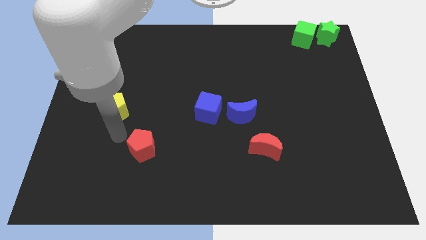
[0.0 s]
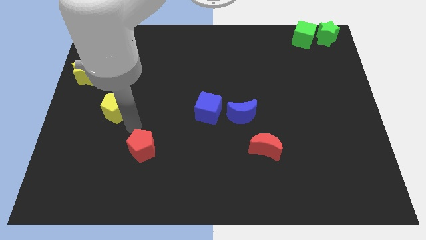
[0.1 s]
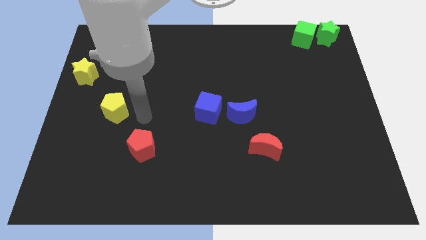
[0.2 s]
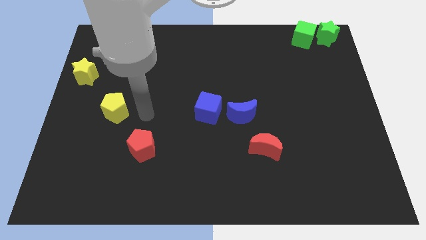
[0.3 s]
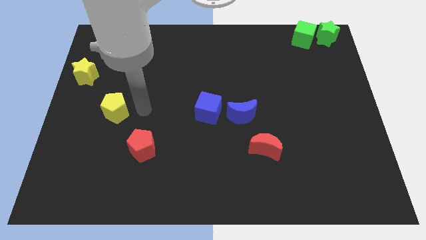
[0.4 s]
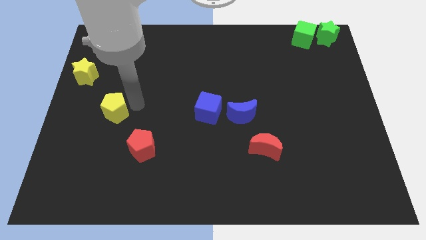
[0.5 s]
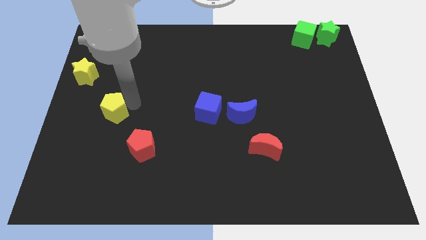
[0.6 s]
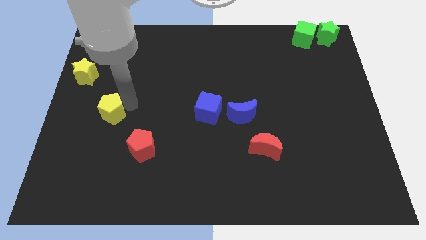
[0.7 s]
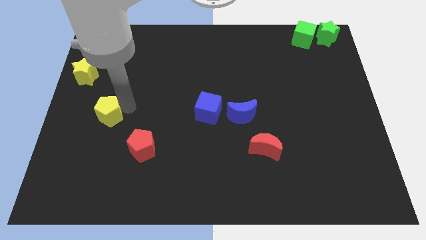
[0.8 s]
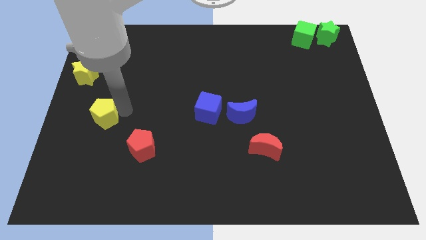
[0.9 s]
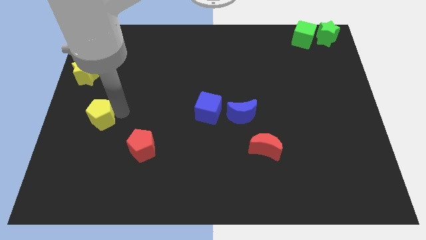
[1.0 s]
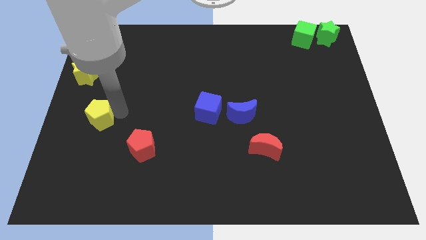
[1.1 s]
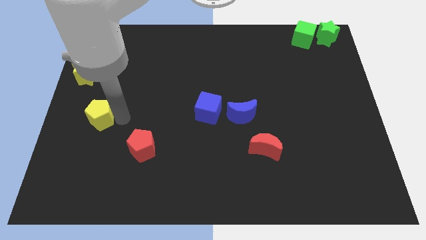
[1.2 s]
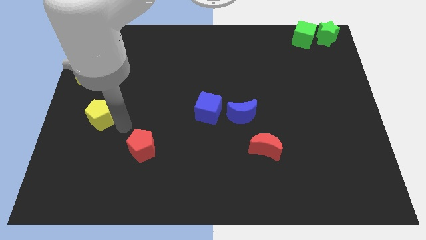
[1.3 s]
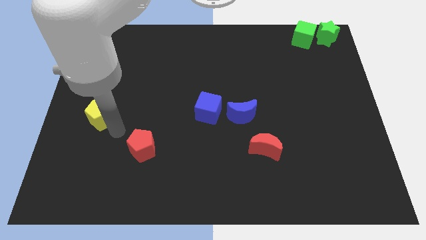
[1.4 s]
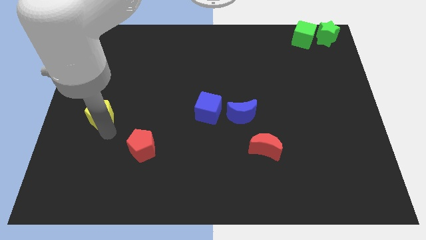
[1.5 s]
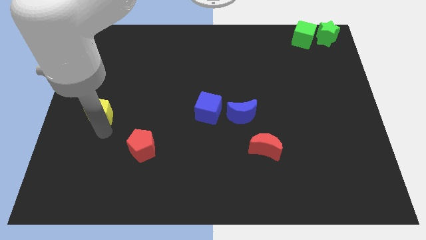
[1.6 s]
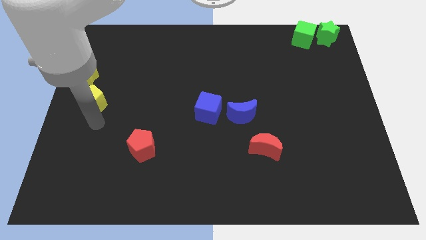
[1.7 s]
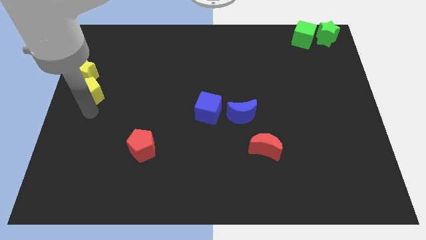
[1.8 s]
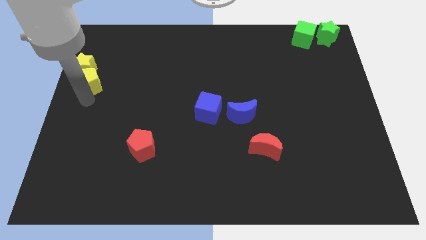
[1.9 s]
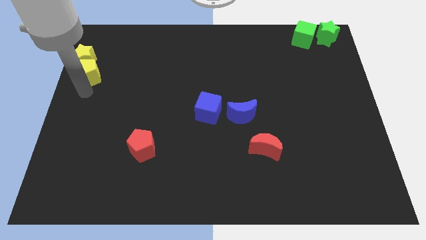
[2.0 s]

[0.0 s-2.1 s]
push the yellow pentagon with yellow star to the top left corner

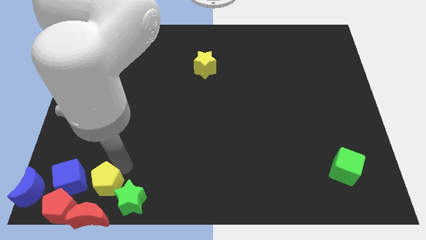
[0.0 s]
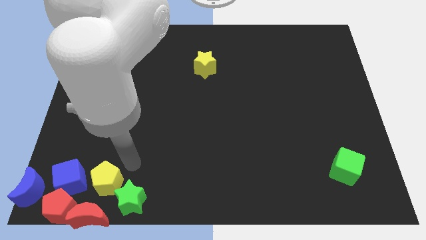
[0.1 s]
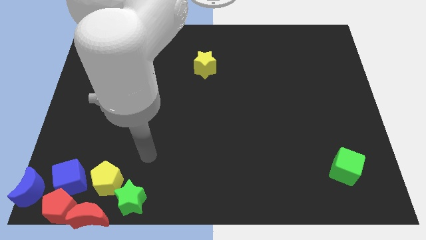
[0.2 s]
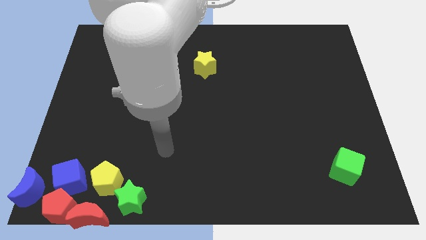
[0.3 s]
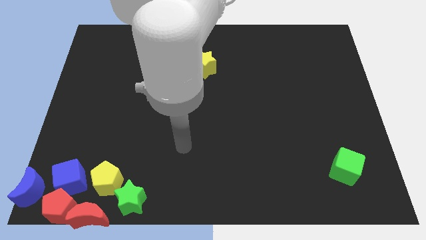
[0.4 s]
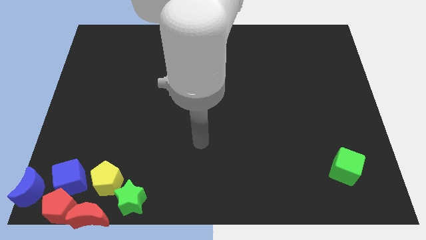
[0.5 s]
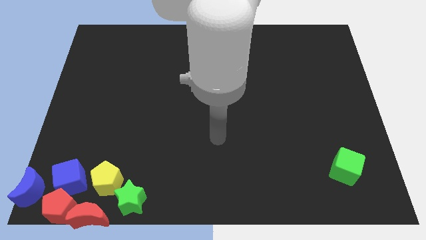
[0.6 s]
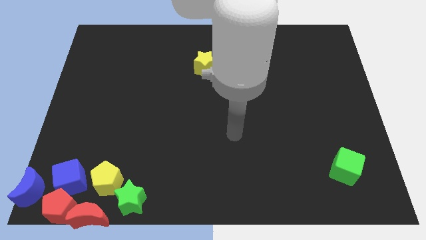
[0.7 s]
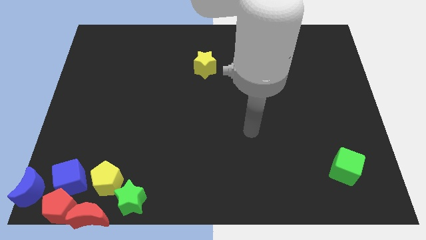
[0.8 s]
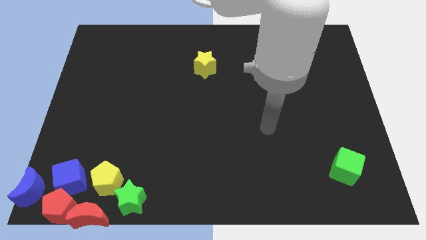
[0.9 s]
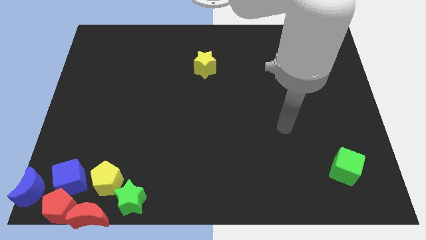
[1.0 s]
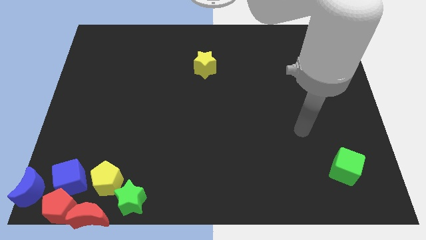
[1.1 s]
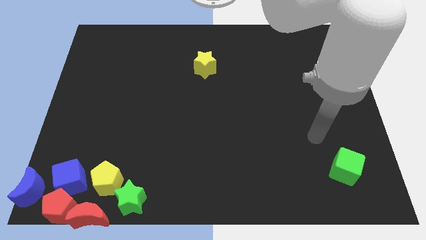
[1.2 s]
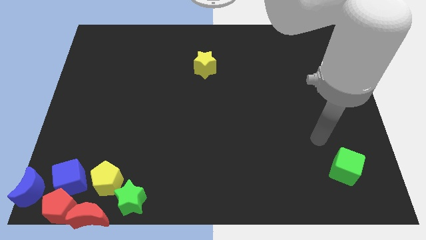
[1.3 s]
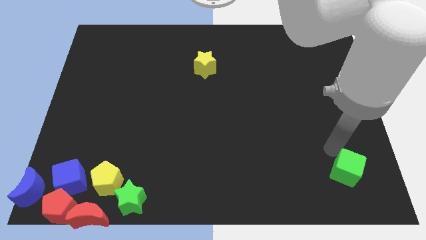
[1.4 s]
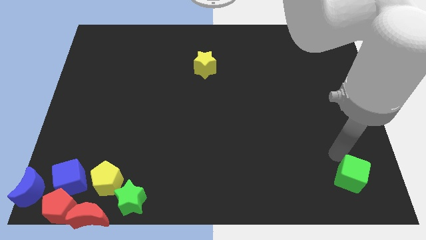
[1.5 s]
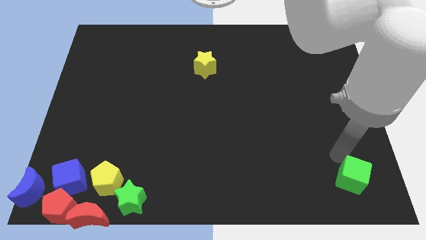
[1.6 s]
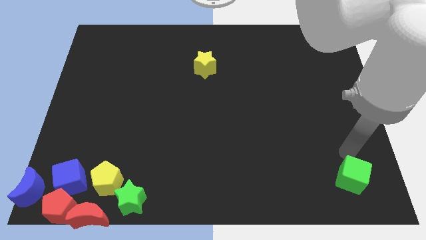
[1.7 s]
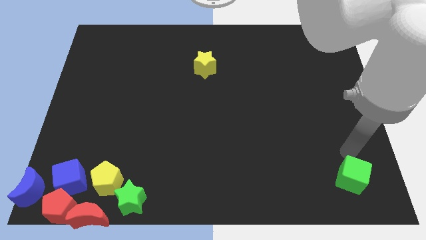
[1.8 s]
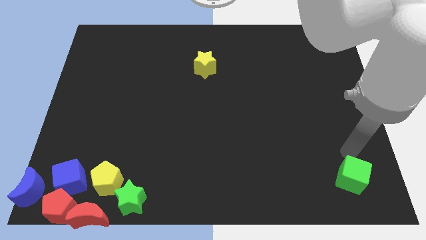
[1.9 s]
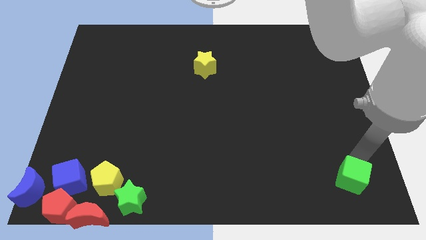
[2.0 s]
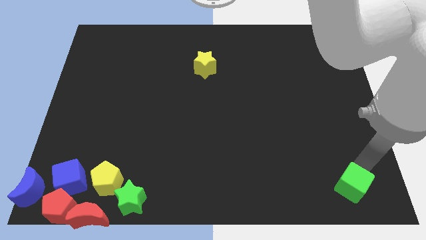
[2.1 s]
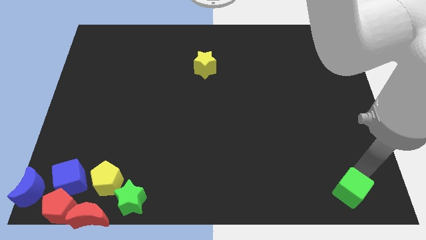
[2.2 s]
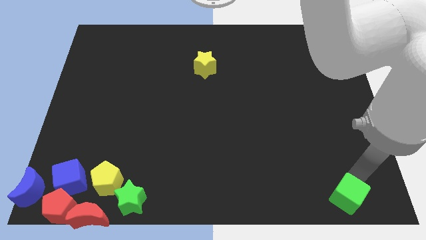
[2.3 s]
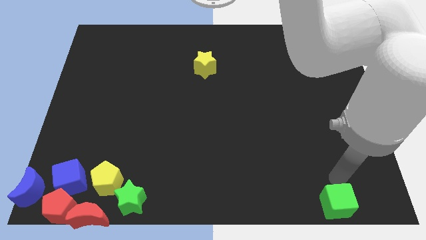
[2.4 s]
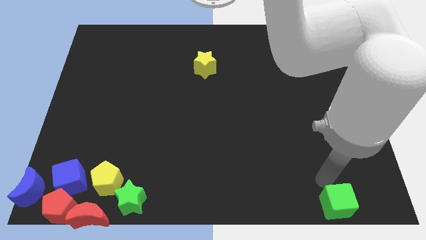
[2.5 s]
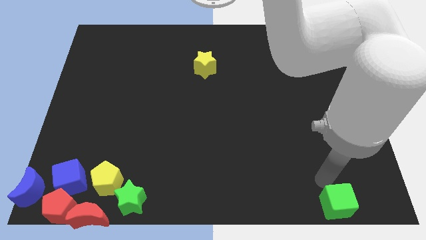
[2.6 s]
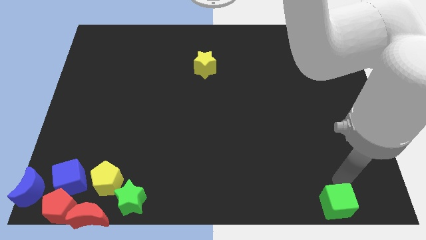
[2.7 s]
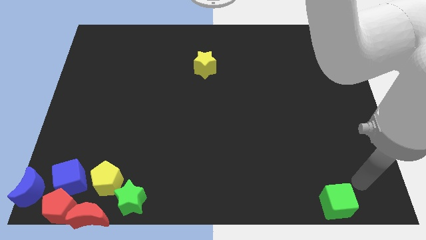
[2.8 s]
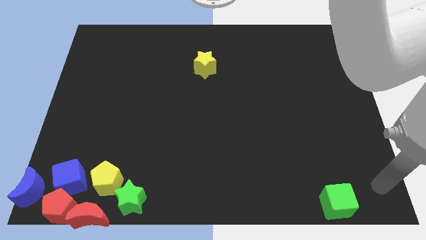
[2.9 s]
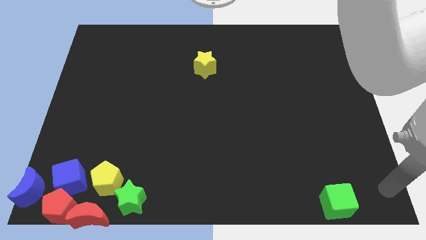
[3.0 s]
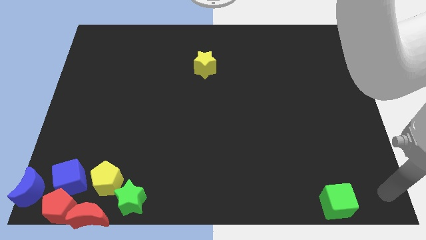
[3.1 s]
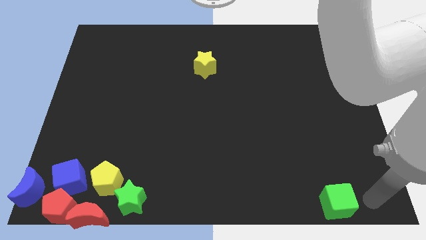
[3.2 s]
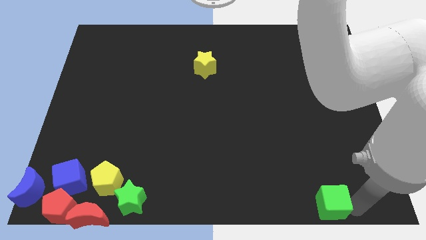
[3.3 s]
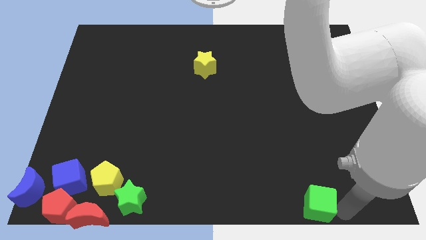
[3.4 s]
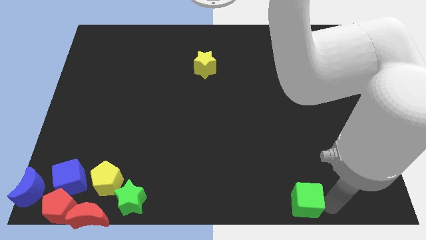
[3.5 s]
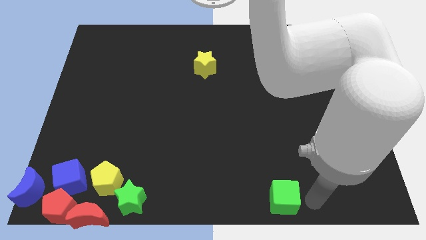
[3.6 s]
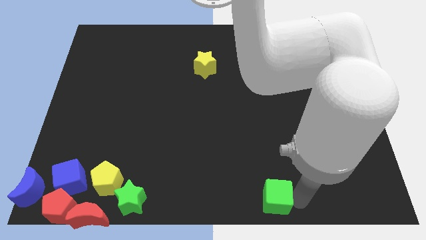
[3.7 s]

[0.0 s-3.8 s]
slide the green cube towards the left side of the table

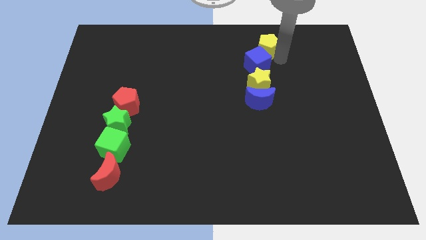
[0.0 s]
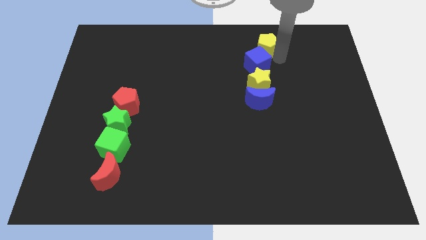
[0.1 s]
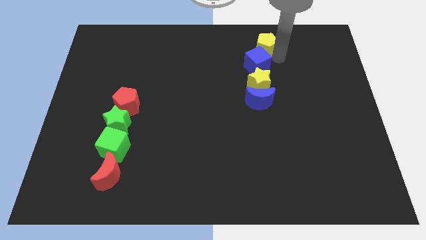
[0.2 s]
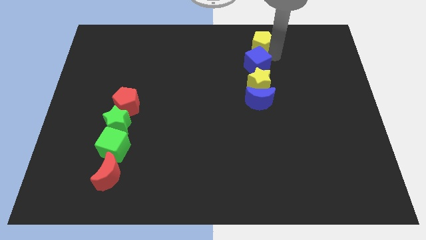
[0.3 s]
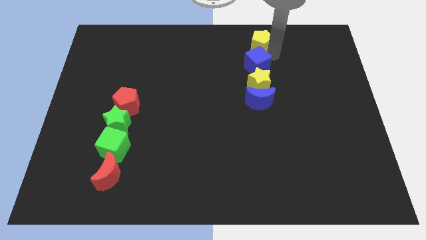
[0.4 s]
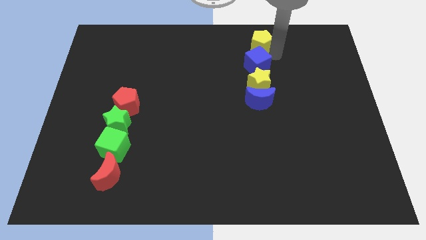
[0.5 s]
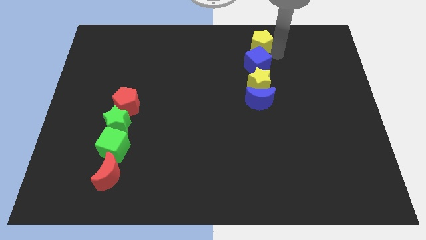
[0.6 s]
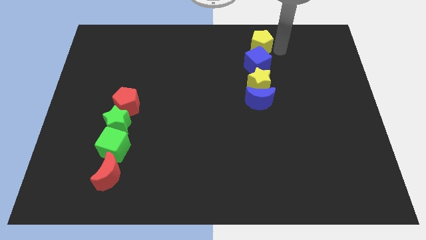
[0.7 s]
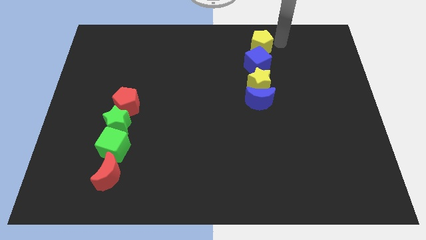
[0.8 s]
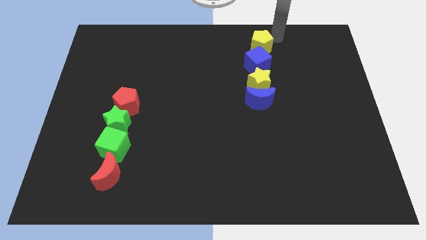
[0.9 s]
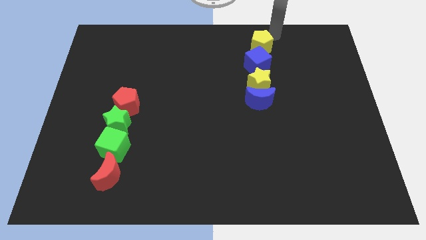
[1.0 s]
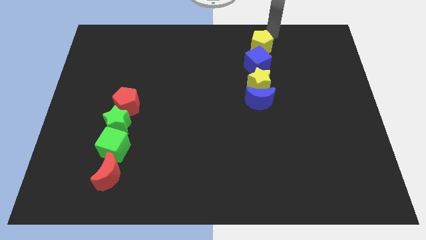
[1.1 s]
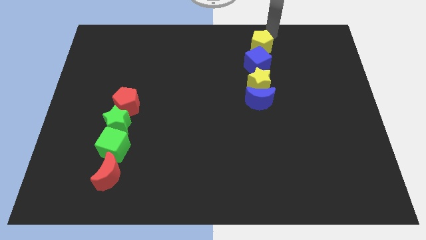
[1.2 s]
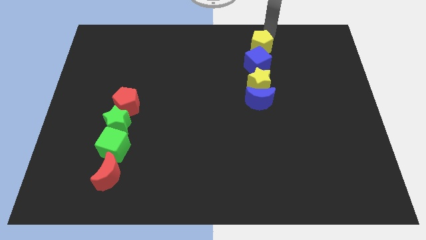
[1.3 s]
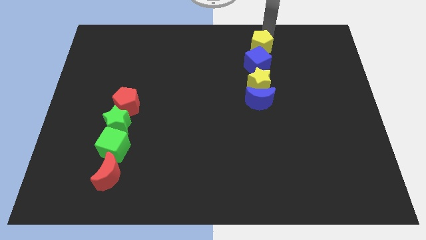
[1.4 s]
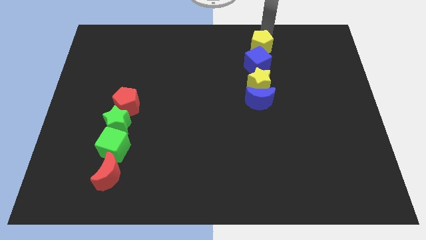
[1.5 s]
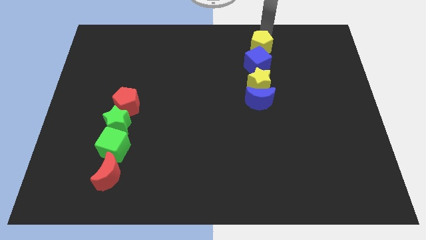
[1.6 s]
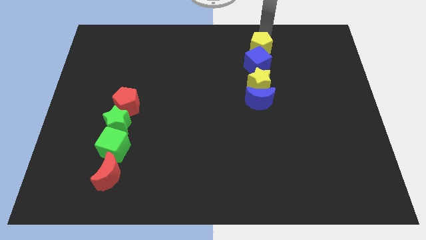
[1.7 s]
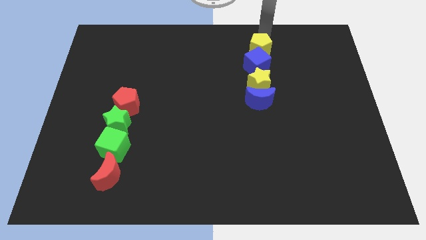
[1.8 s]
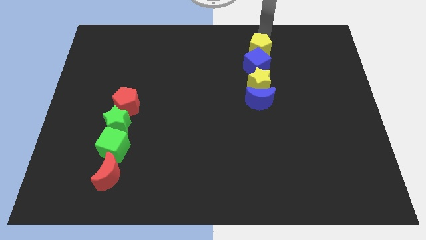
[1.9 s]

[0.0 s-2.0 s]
move the yellow pentagon at the top of the blue cube

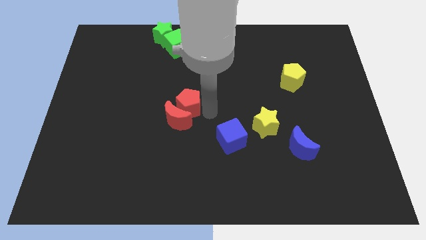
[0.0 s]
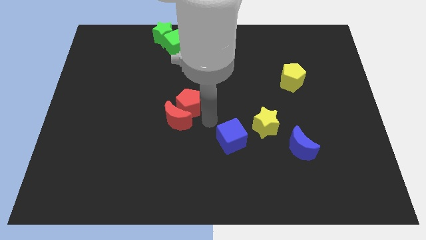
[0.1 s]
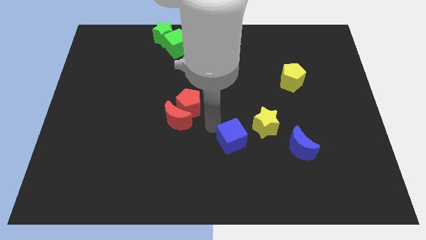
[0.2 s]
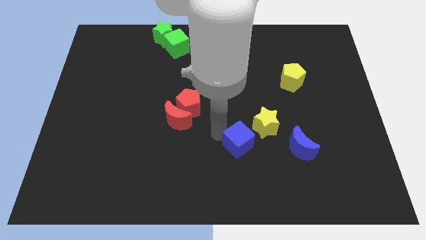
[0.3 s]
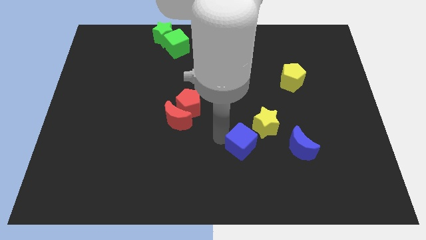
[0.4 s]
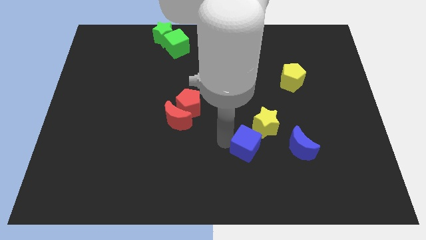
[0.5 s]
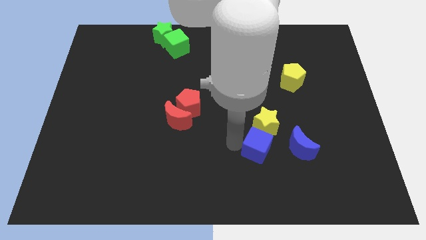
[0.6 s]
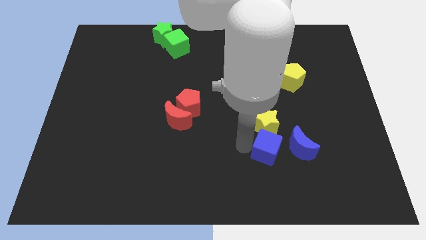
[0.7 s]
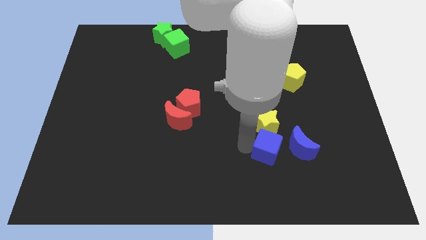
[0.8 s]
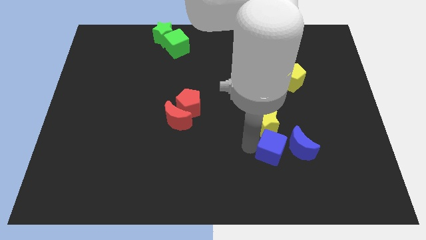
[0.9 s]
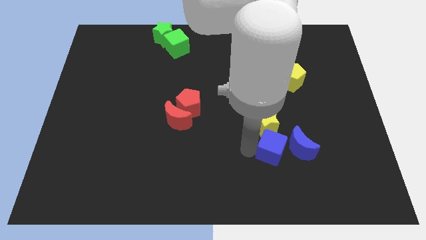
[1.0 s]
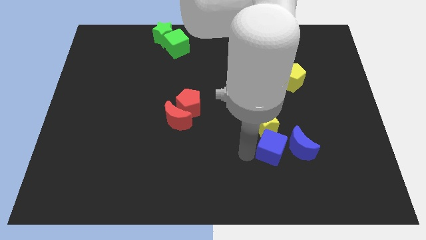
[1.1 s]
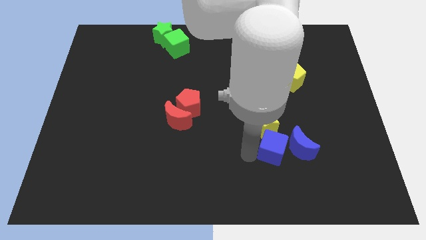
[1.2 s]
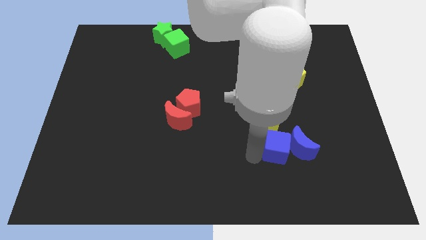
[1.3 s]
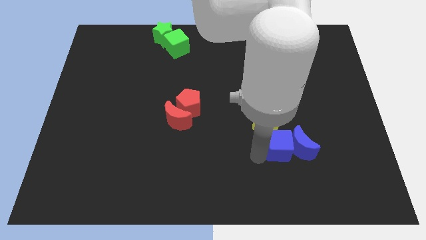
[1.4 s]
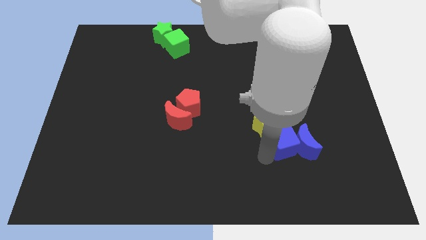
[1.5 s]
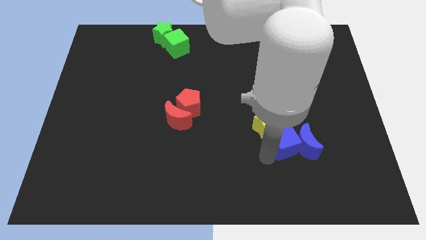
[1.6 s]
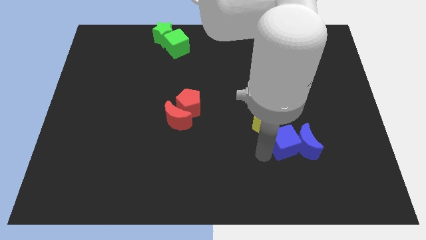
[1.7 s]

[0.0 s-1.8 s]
move the blue cube into the left side of the blue moon
